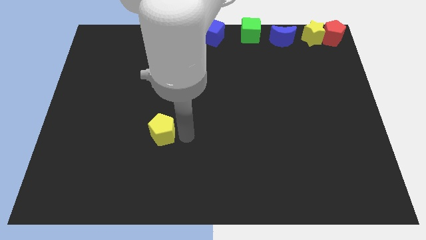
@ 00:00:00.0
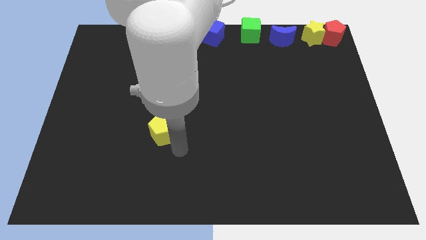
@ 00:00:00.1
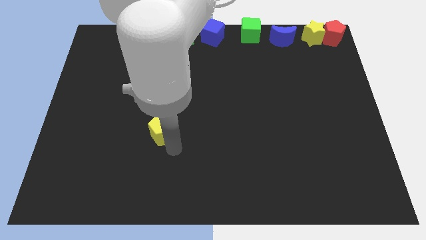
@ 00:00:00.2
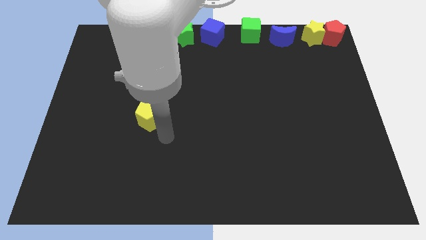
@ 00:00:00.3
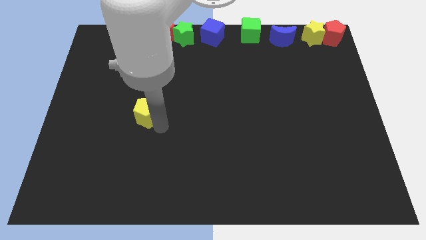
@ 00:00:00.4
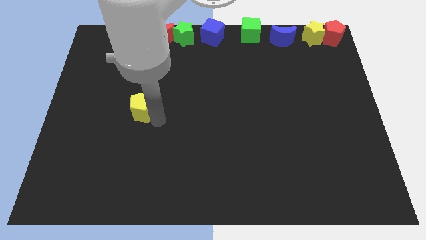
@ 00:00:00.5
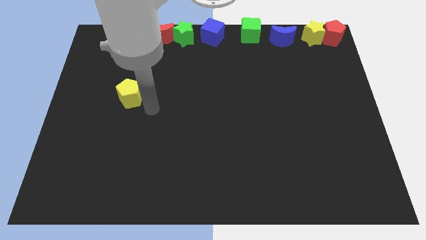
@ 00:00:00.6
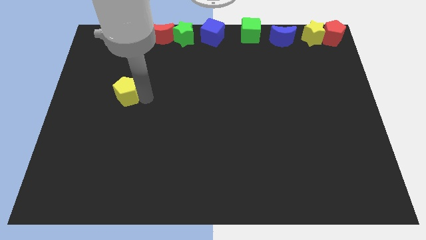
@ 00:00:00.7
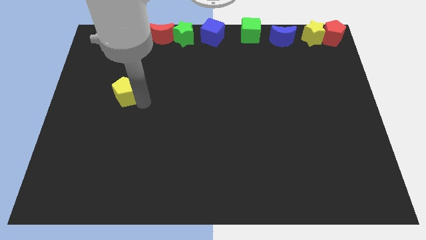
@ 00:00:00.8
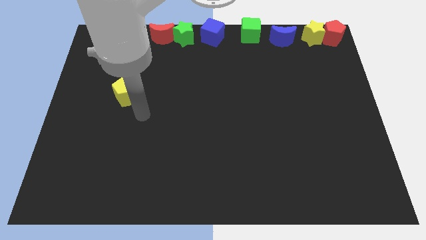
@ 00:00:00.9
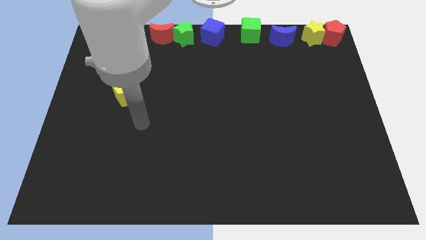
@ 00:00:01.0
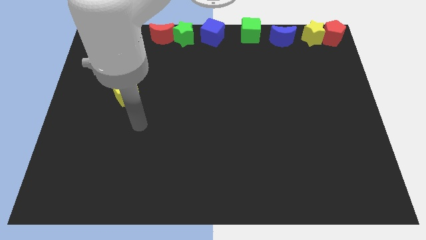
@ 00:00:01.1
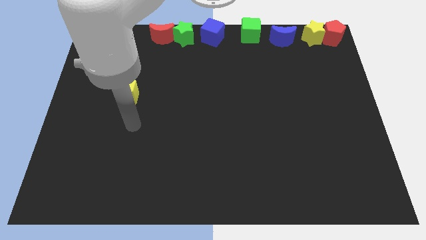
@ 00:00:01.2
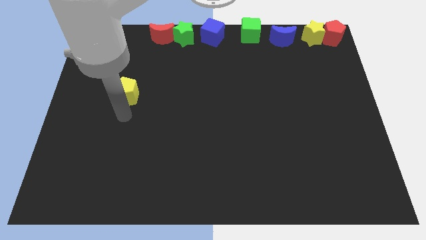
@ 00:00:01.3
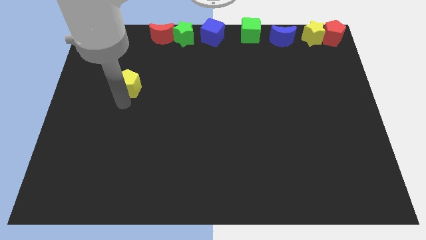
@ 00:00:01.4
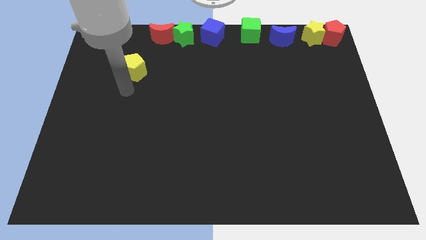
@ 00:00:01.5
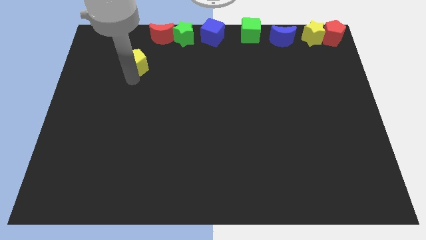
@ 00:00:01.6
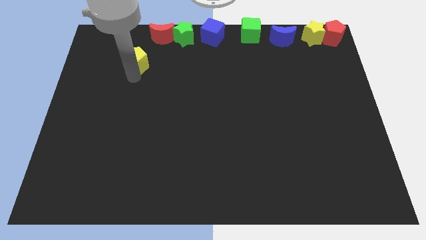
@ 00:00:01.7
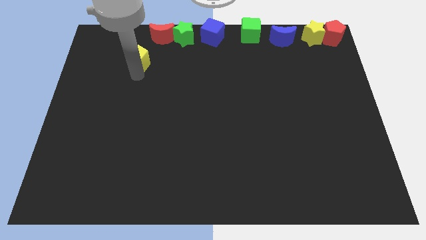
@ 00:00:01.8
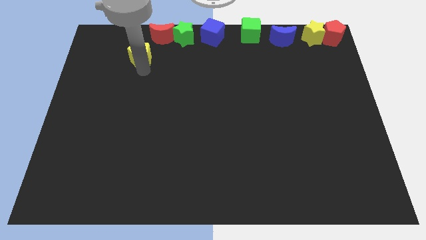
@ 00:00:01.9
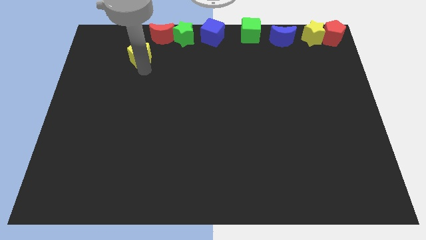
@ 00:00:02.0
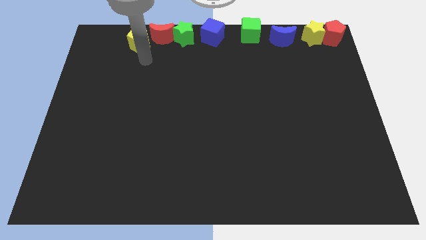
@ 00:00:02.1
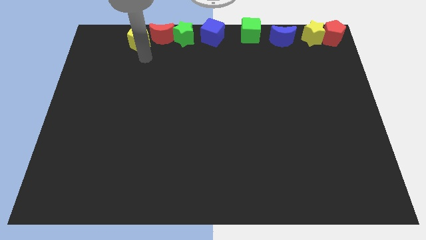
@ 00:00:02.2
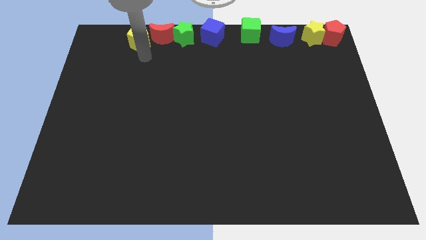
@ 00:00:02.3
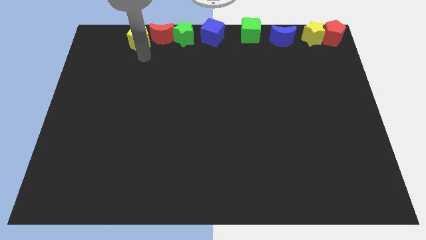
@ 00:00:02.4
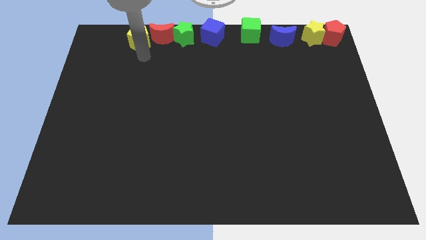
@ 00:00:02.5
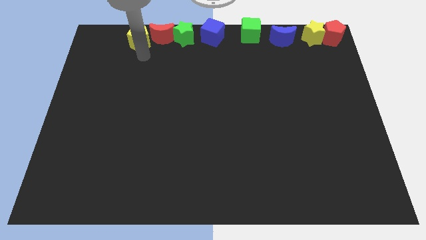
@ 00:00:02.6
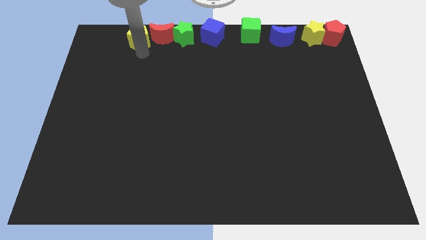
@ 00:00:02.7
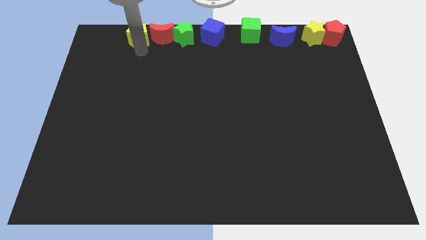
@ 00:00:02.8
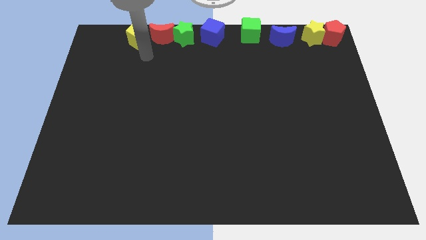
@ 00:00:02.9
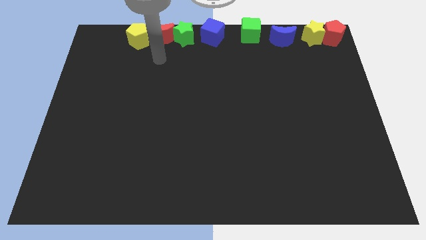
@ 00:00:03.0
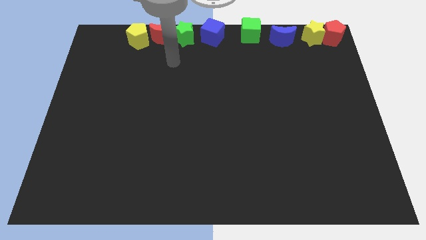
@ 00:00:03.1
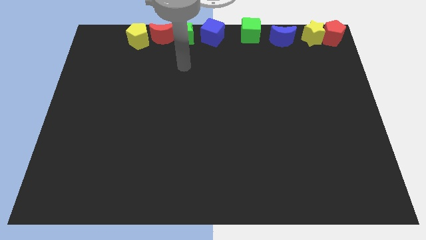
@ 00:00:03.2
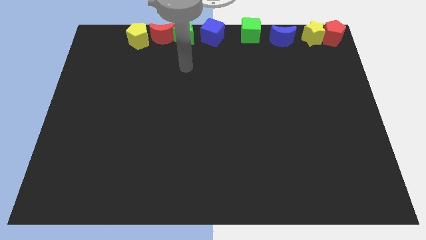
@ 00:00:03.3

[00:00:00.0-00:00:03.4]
slide the yellow pentagon left to the red moon

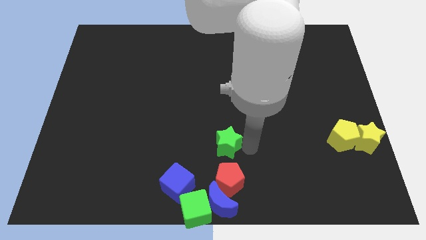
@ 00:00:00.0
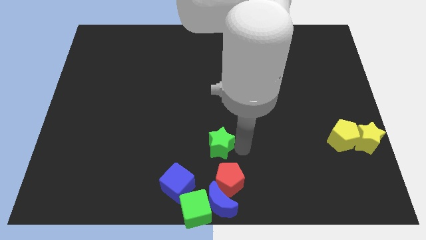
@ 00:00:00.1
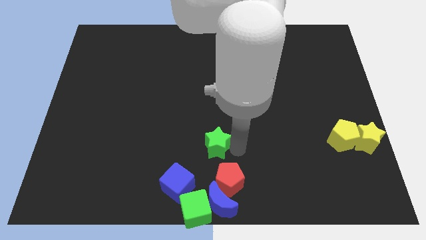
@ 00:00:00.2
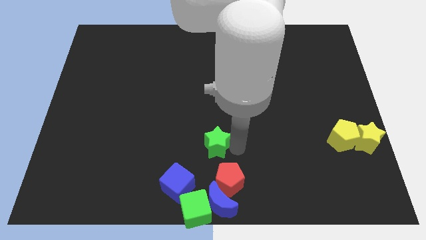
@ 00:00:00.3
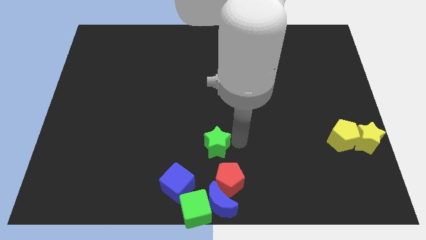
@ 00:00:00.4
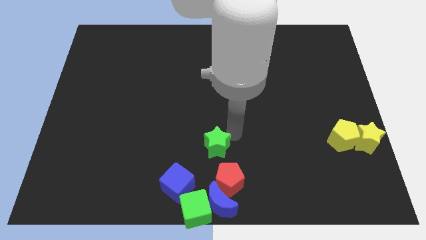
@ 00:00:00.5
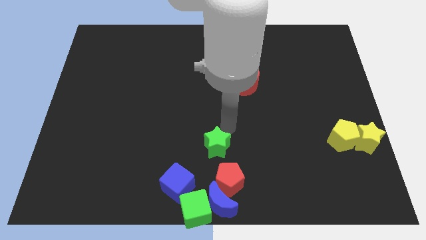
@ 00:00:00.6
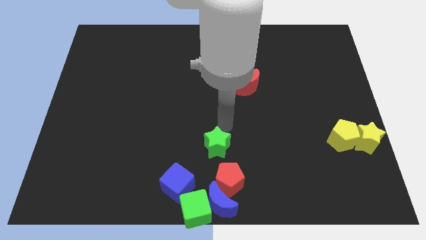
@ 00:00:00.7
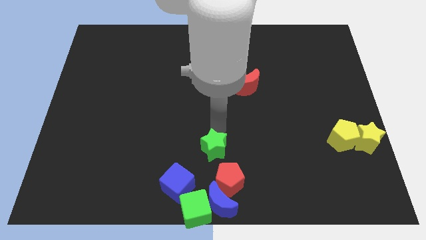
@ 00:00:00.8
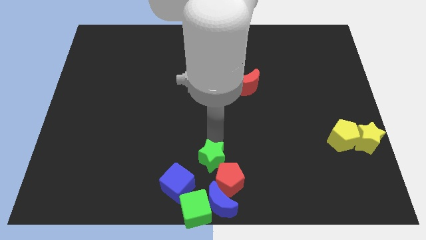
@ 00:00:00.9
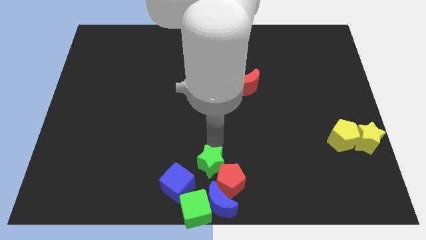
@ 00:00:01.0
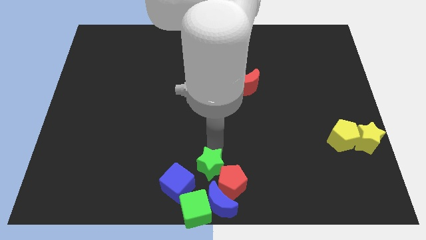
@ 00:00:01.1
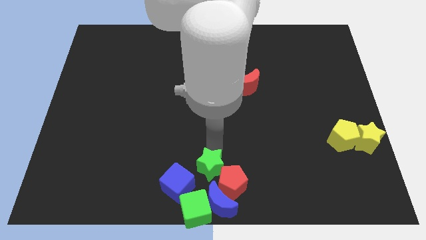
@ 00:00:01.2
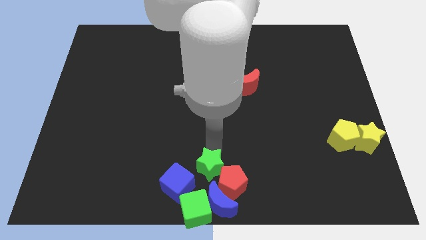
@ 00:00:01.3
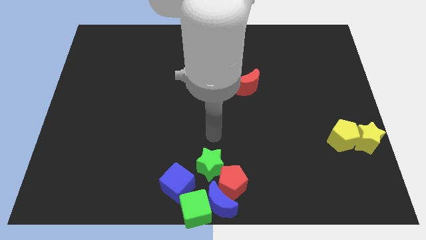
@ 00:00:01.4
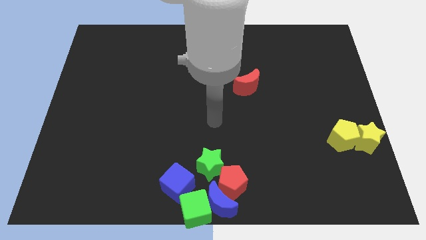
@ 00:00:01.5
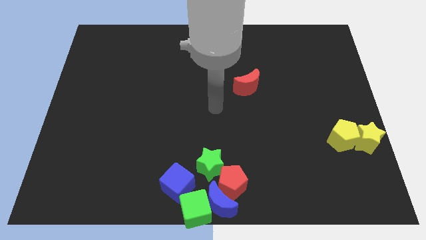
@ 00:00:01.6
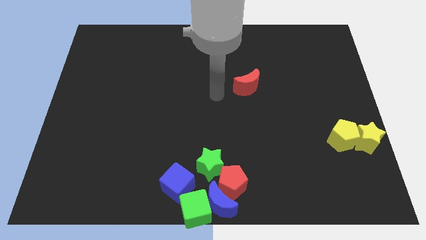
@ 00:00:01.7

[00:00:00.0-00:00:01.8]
push the green star on the top left of the red pentagon

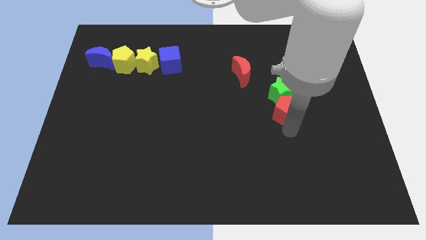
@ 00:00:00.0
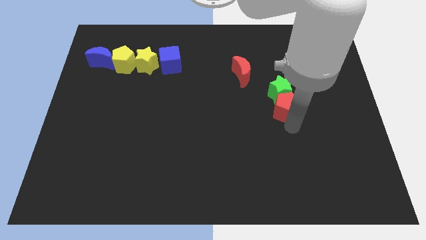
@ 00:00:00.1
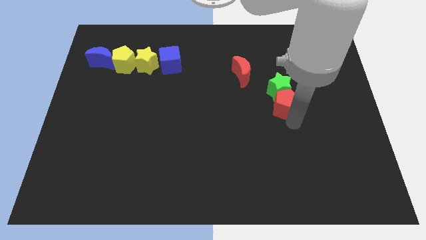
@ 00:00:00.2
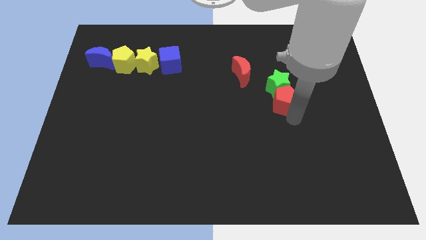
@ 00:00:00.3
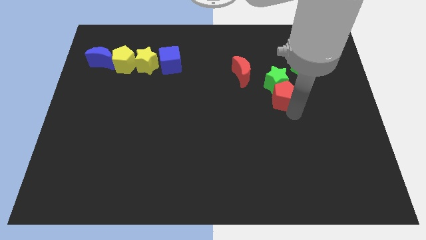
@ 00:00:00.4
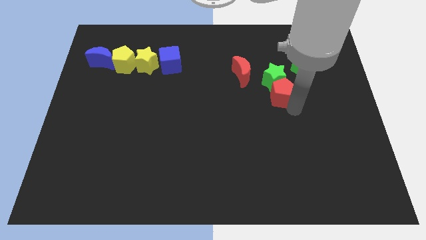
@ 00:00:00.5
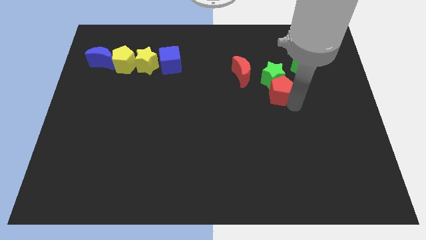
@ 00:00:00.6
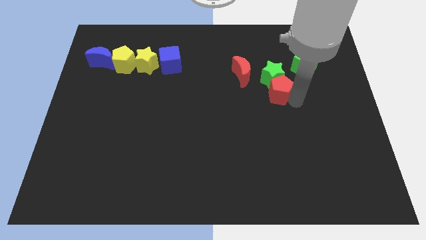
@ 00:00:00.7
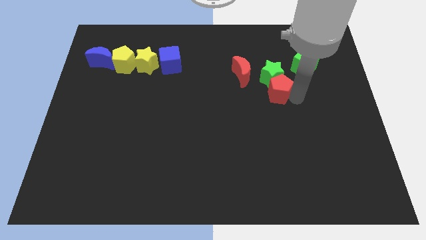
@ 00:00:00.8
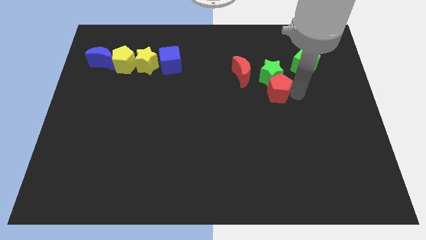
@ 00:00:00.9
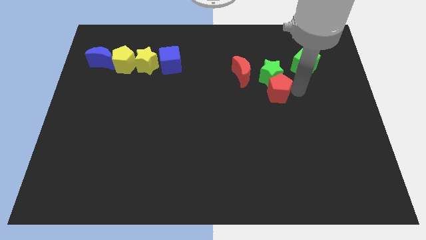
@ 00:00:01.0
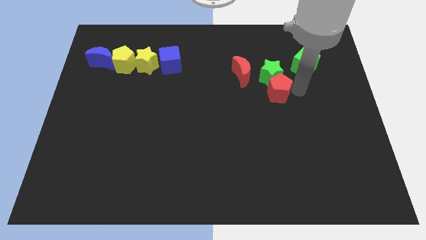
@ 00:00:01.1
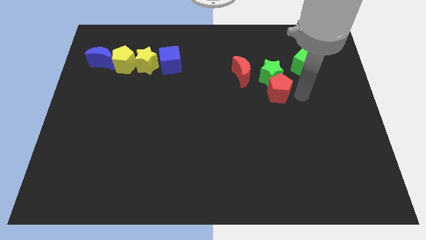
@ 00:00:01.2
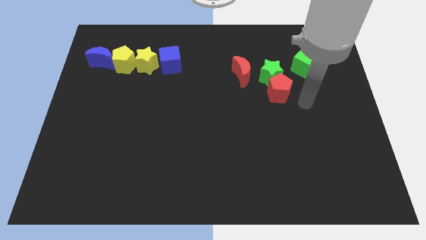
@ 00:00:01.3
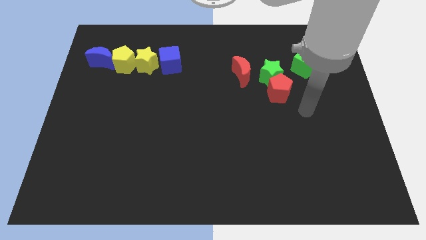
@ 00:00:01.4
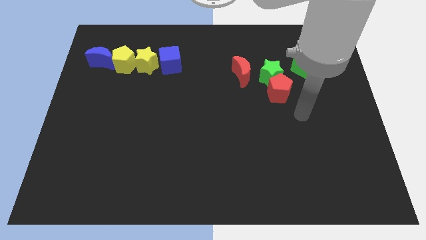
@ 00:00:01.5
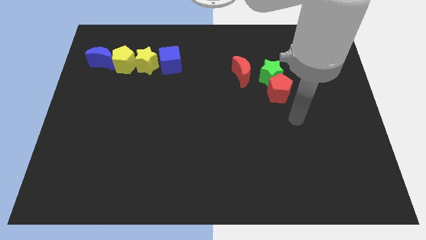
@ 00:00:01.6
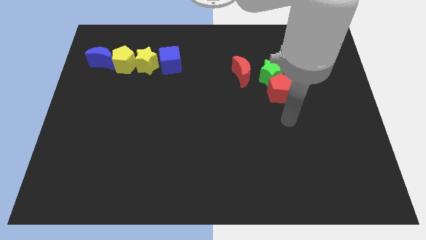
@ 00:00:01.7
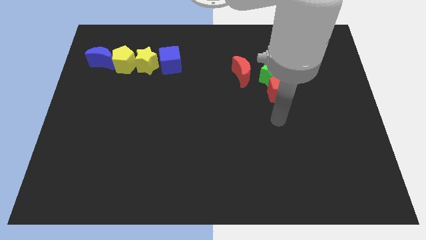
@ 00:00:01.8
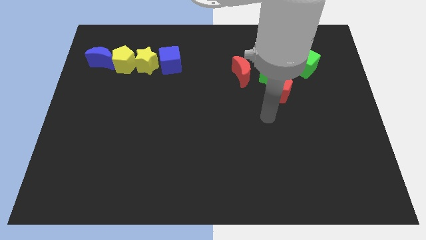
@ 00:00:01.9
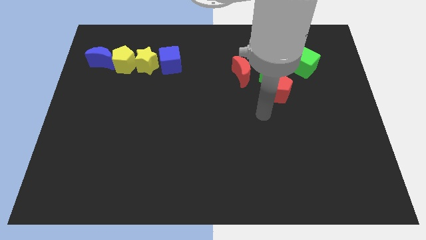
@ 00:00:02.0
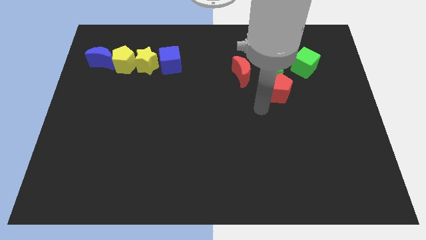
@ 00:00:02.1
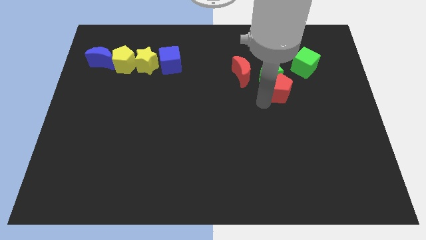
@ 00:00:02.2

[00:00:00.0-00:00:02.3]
push the red pentagon and green star to the middle of the red crescent and green cube

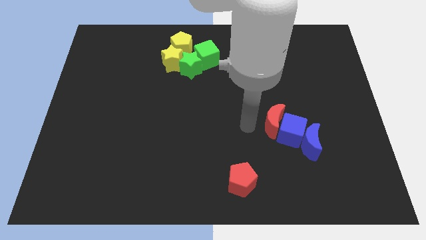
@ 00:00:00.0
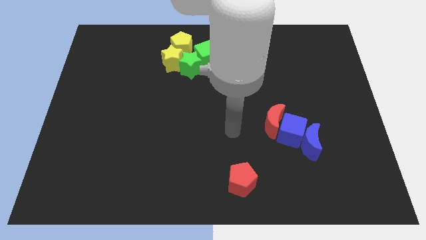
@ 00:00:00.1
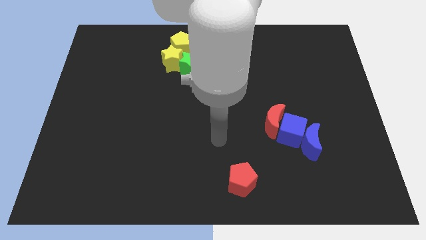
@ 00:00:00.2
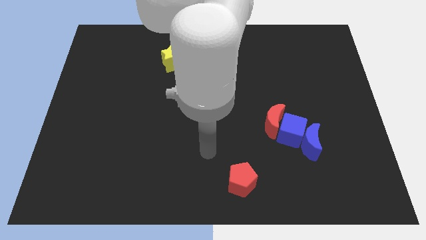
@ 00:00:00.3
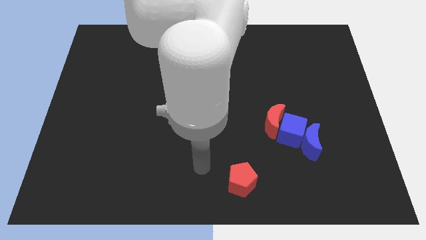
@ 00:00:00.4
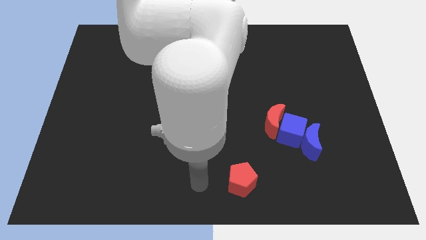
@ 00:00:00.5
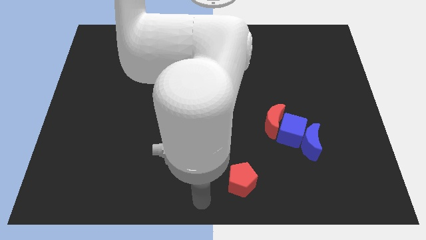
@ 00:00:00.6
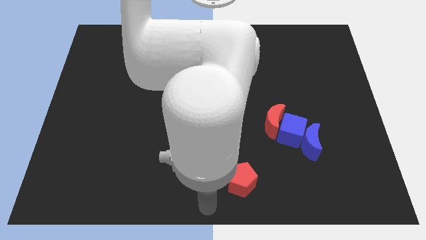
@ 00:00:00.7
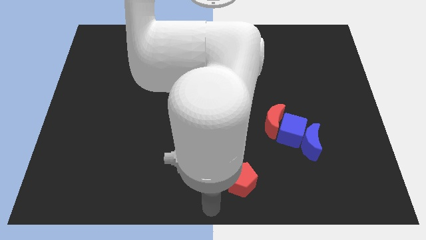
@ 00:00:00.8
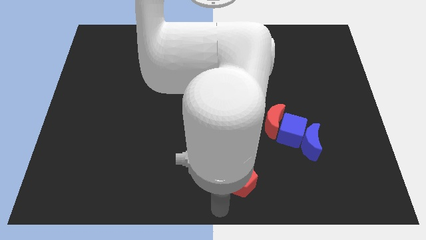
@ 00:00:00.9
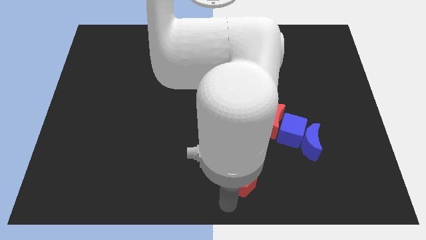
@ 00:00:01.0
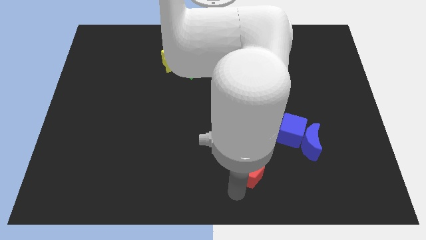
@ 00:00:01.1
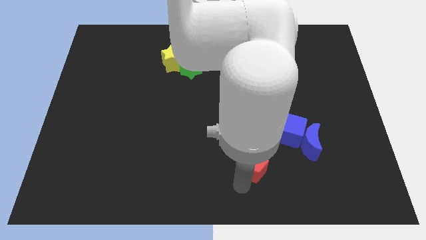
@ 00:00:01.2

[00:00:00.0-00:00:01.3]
push the red pentagon slightly up
